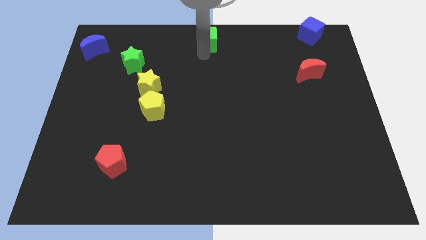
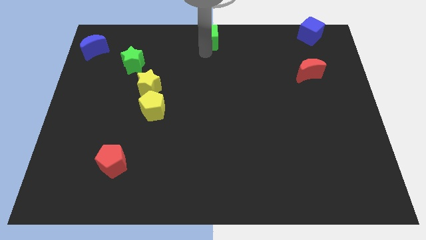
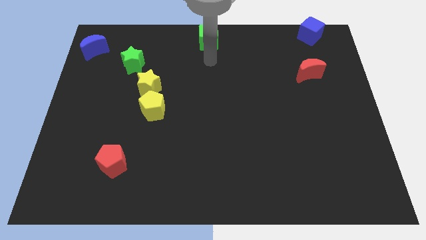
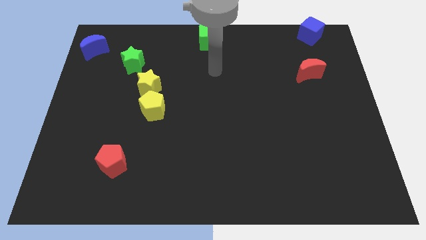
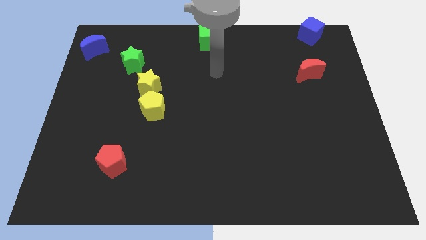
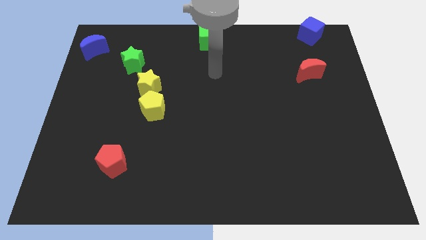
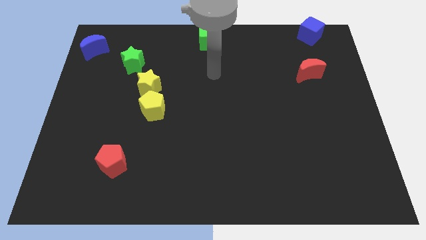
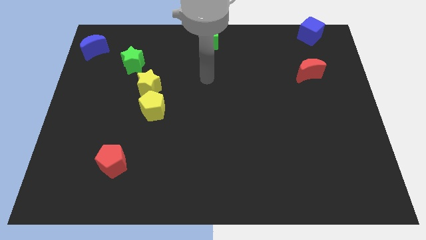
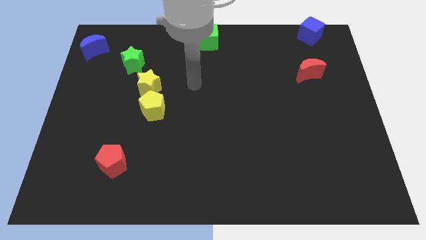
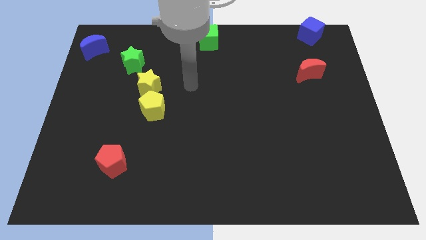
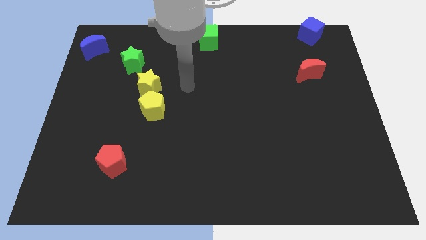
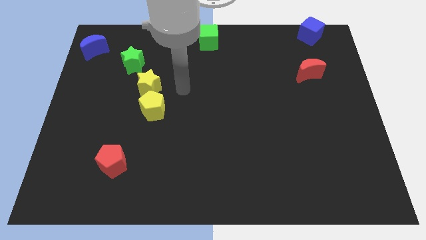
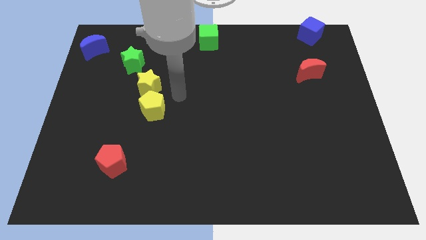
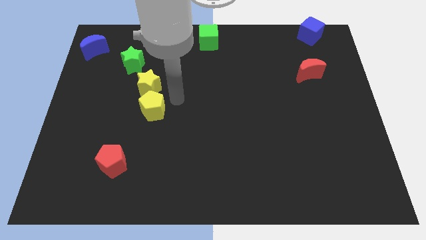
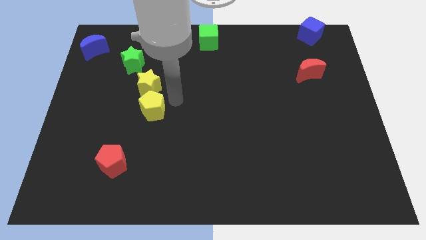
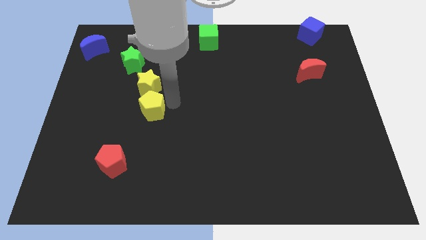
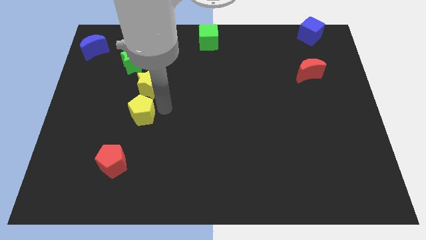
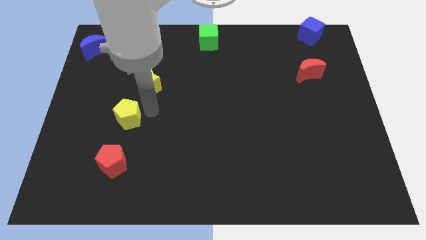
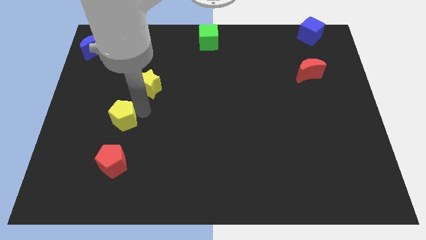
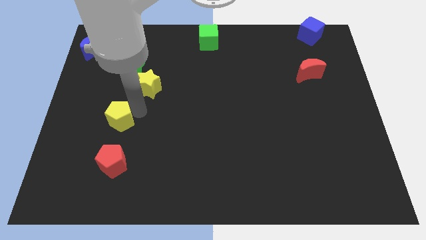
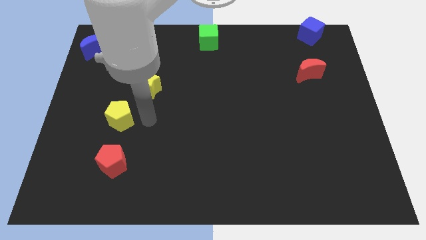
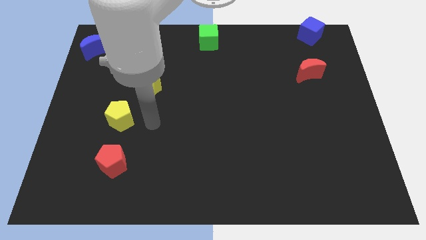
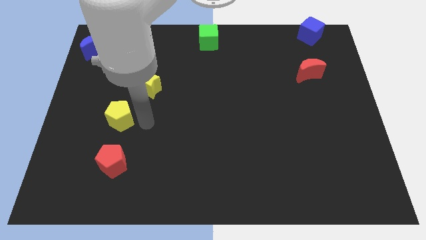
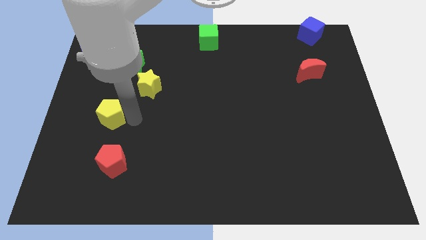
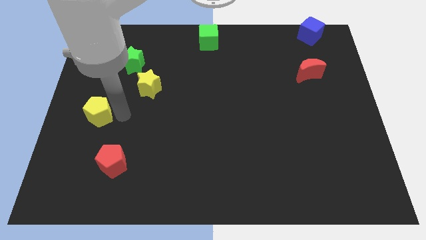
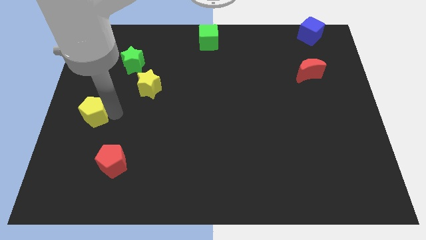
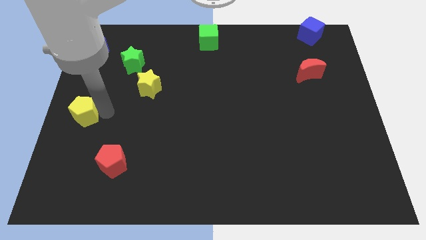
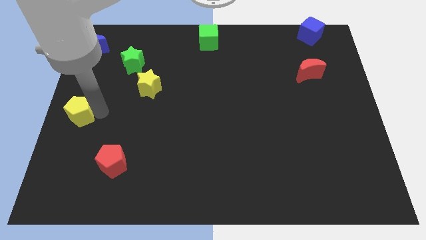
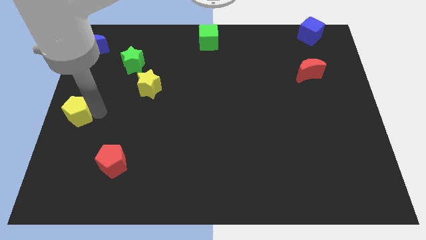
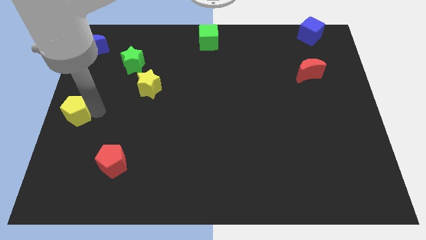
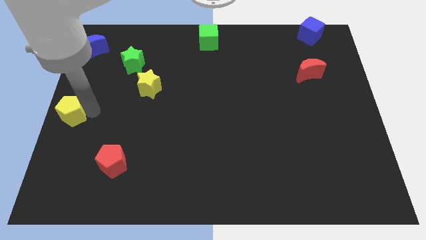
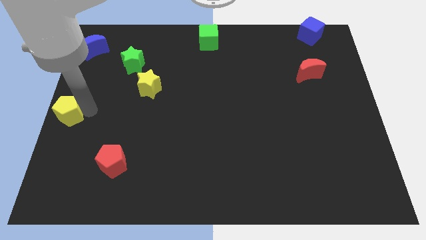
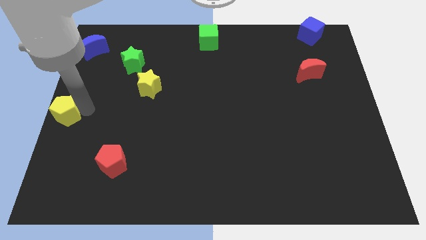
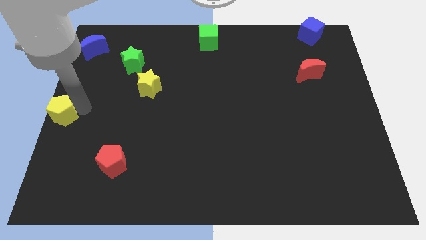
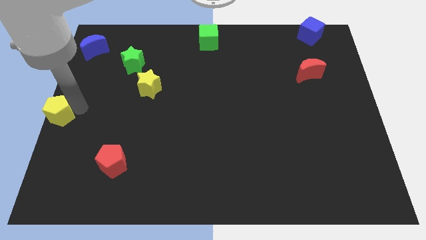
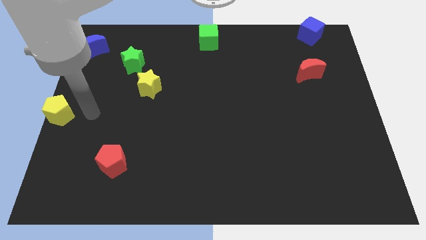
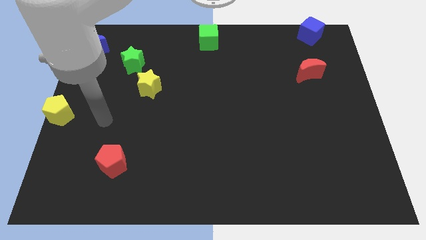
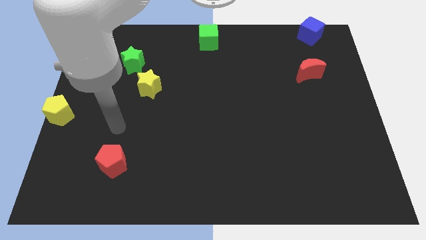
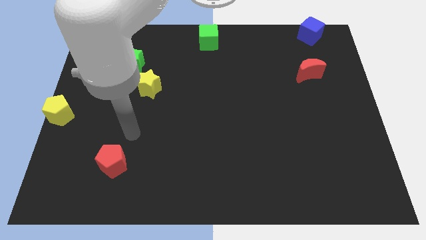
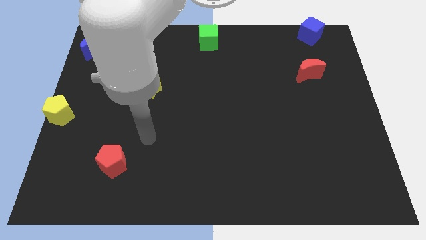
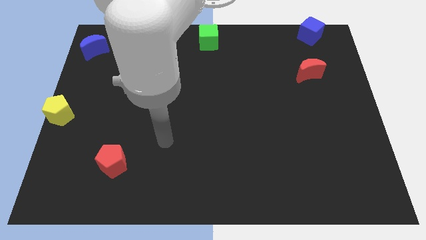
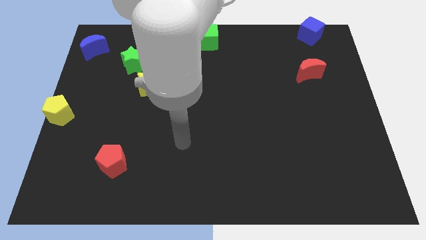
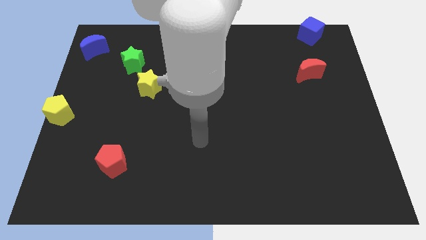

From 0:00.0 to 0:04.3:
move the yellow pentagon to the center left of the board

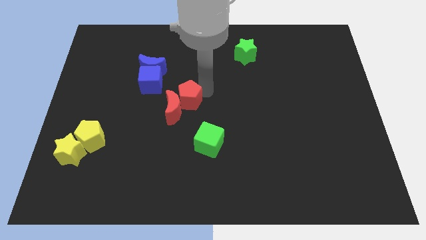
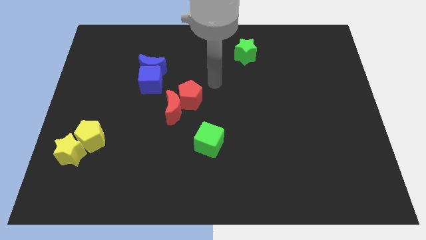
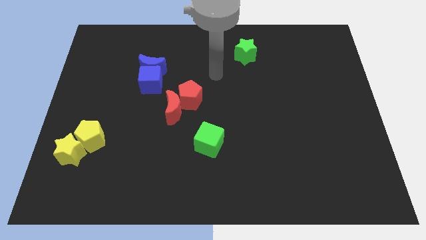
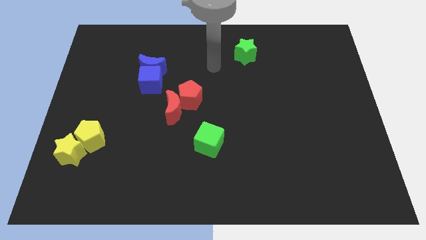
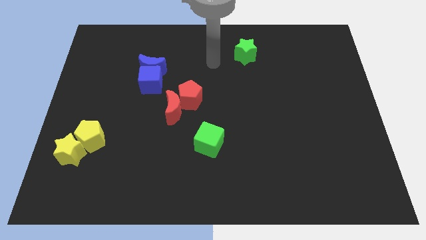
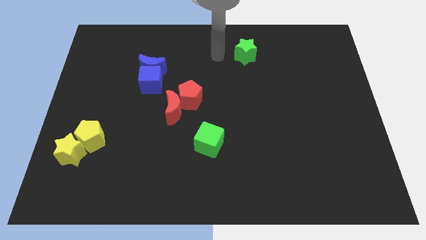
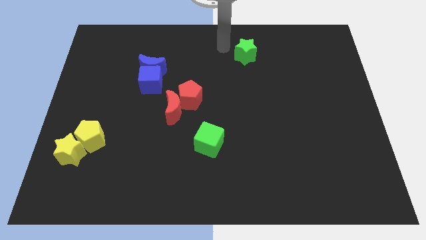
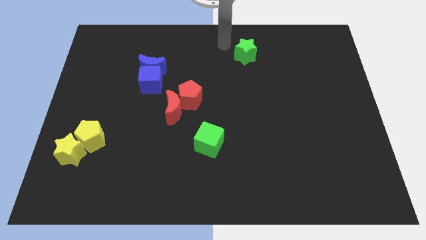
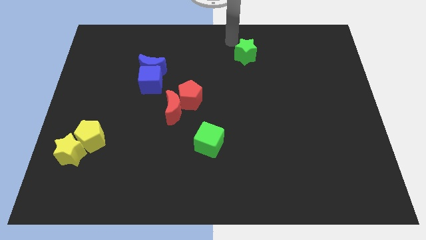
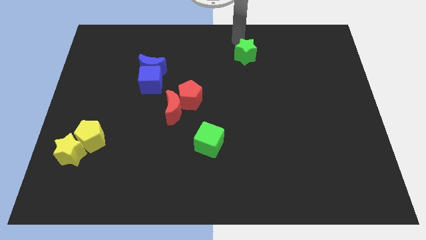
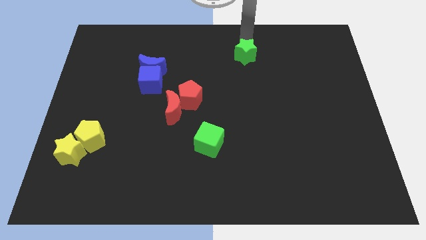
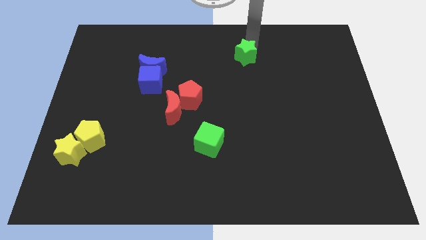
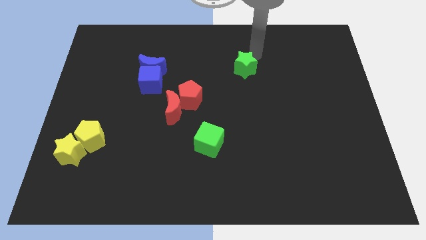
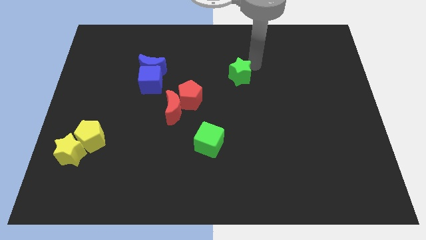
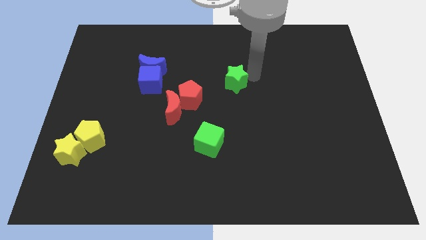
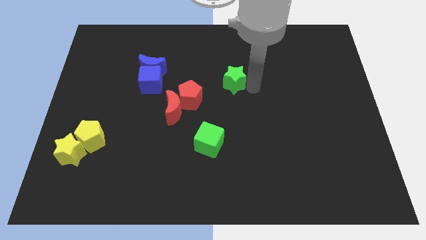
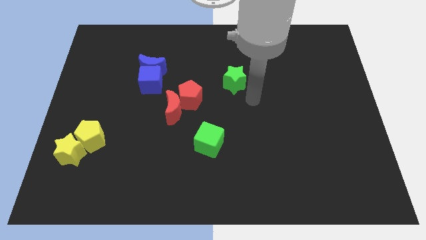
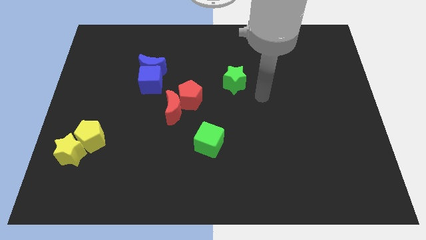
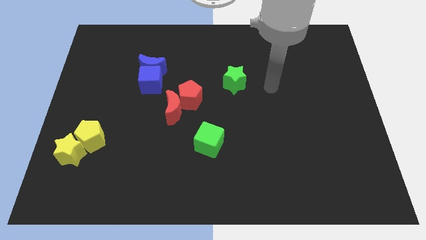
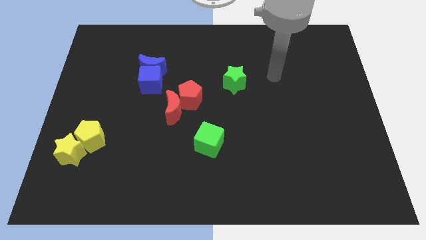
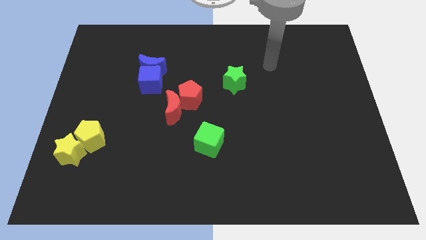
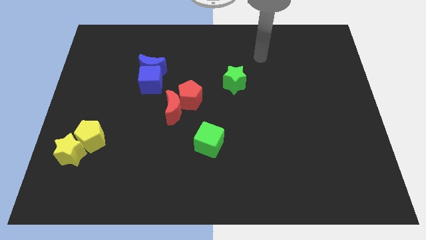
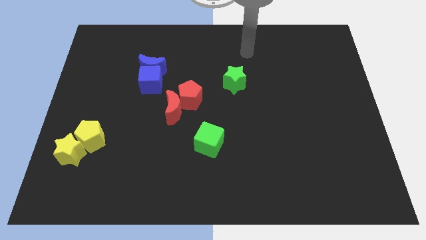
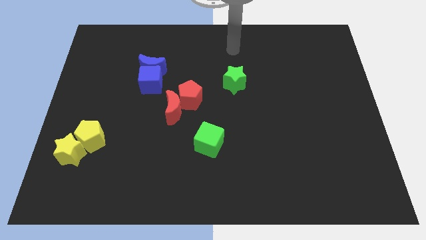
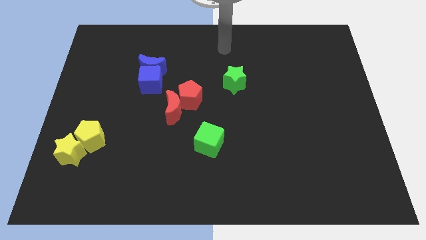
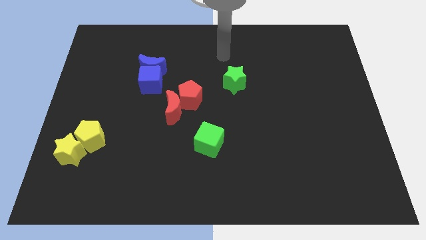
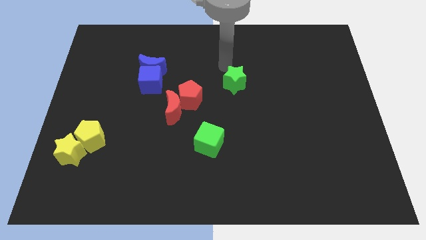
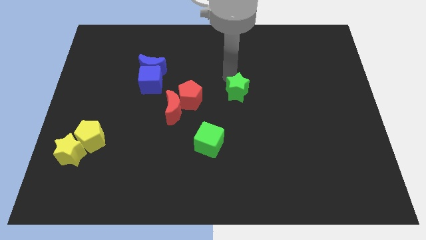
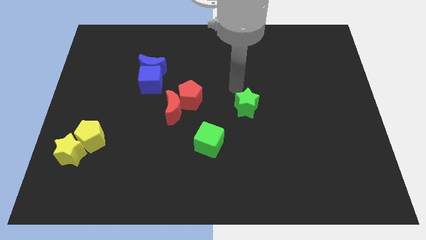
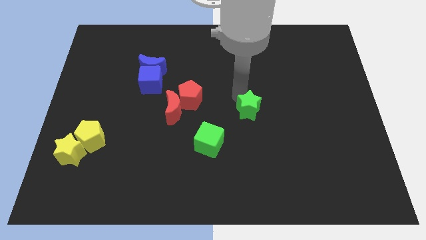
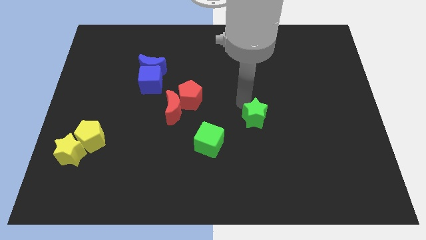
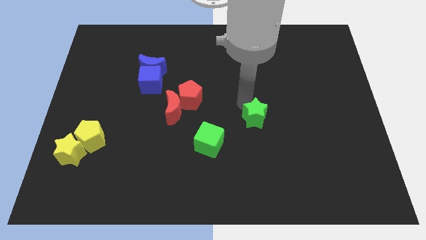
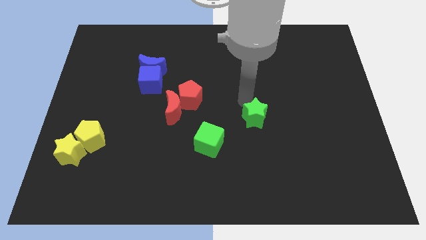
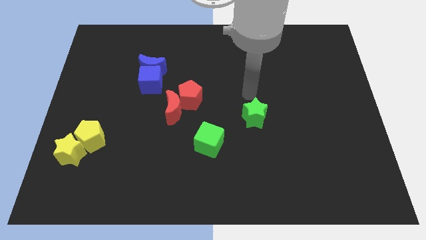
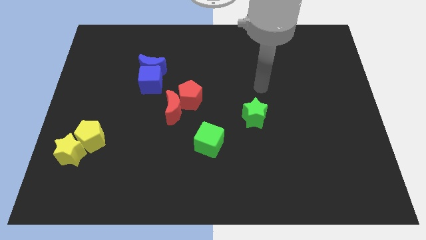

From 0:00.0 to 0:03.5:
move the green star on the top right of the green cube diagonally cube

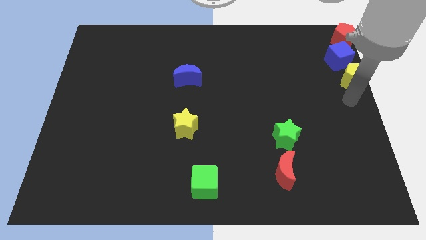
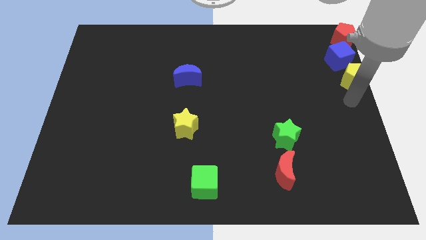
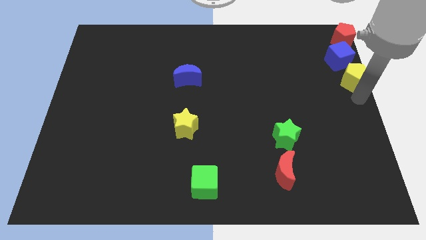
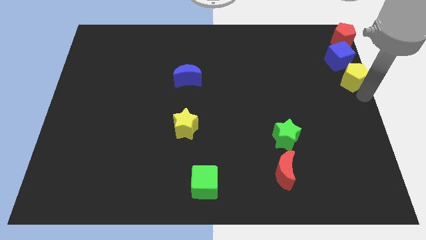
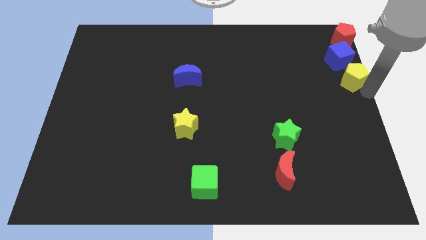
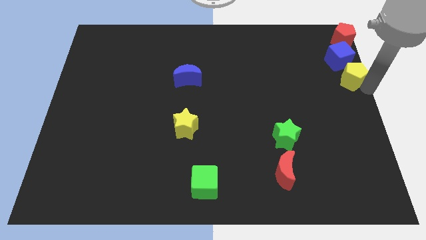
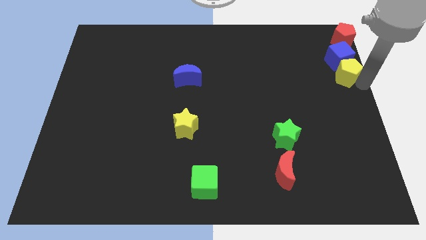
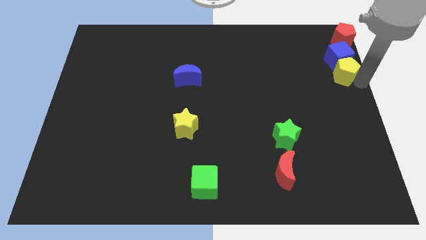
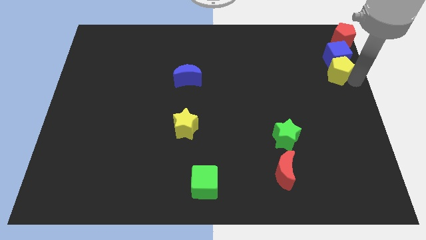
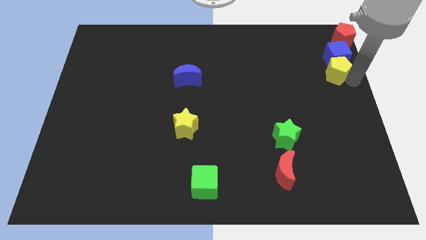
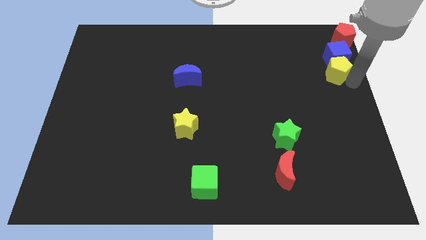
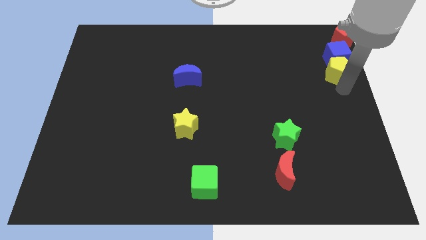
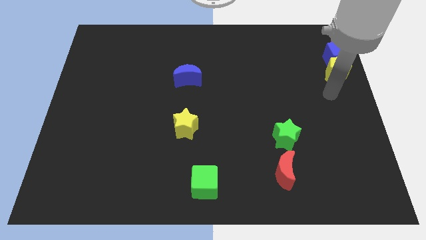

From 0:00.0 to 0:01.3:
push yellow pentagon close to blue cube and red pentagon

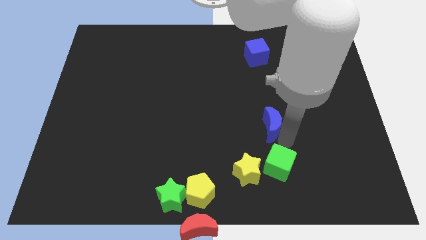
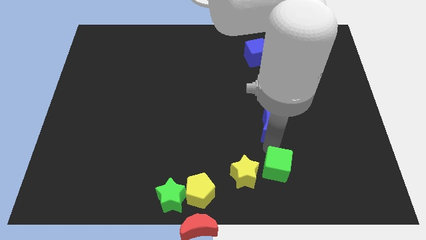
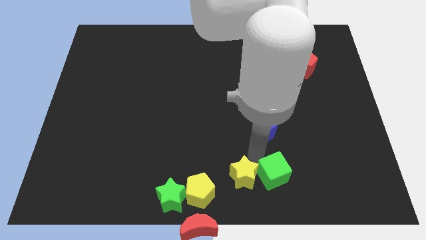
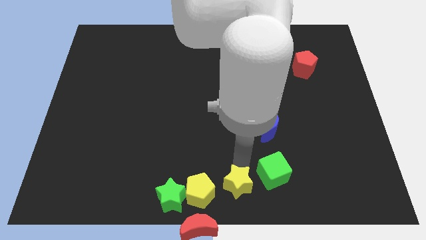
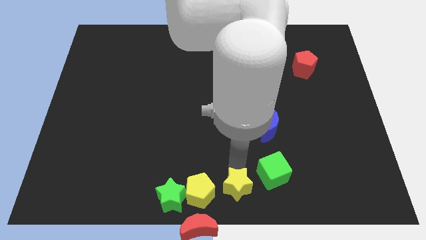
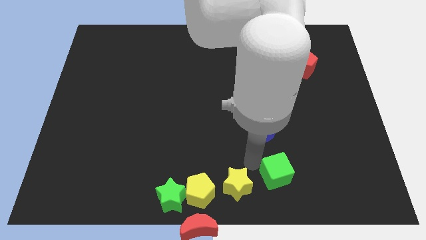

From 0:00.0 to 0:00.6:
push the yellow star to the right of the yellow pentagon
